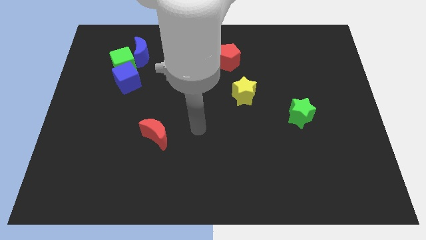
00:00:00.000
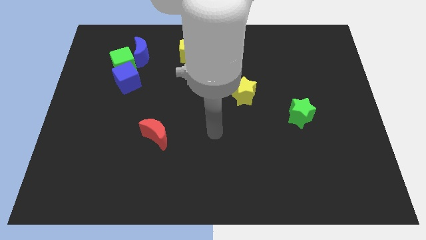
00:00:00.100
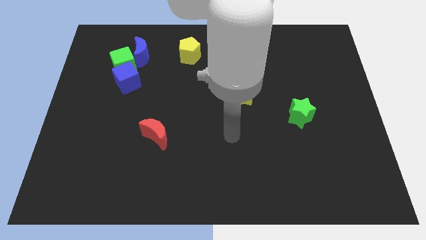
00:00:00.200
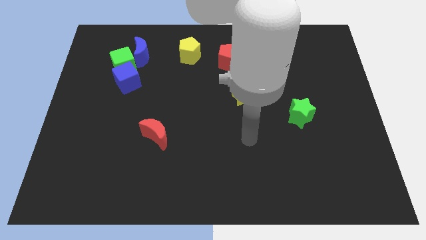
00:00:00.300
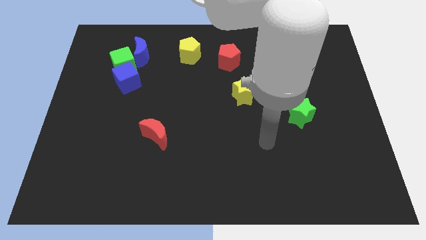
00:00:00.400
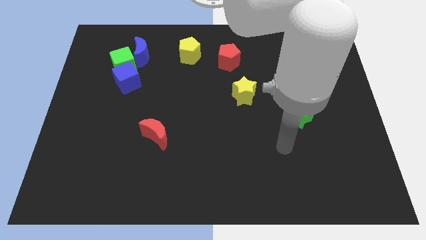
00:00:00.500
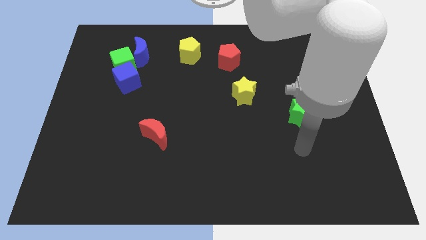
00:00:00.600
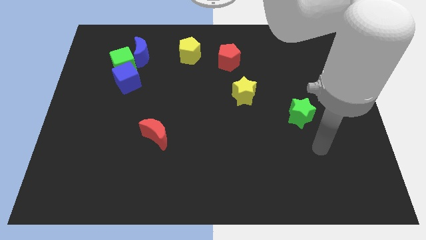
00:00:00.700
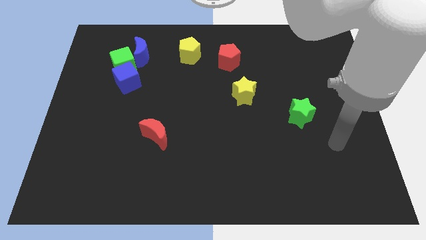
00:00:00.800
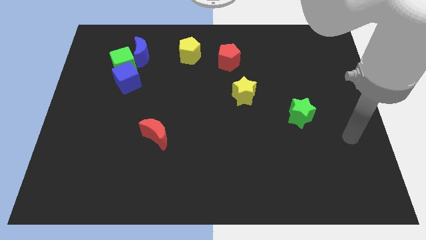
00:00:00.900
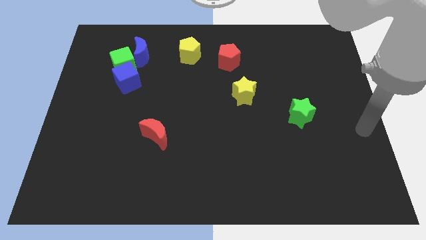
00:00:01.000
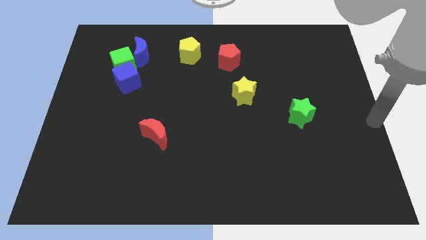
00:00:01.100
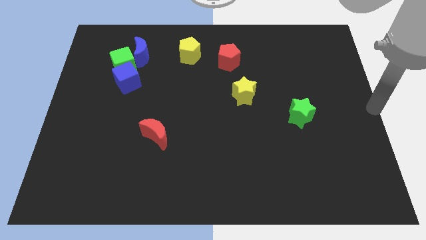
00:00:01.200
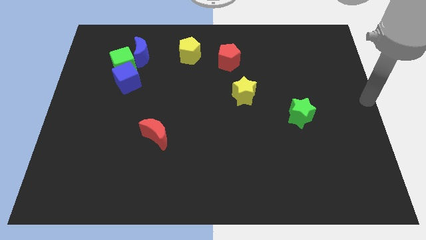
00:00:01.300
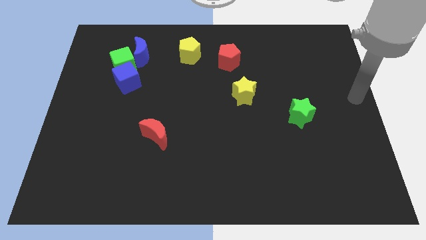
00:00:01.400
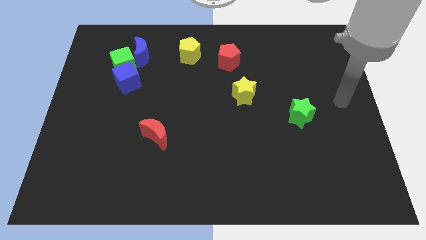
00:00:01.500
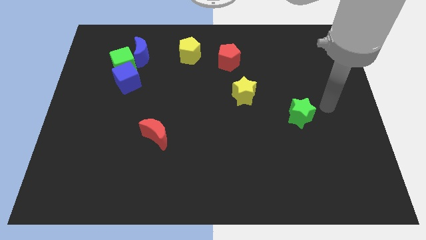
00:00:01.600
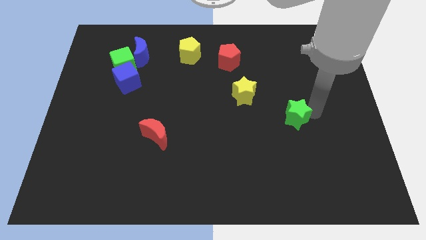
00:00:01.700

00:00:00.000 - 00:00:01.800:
move your arm to the right side of the green star

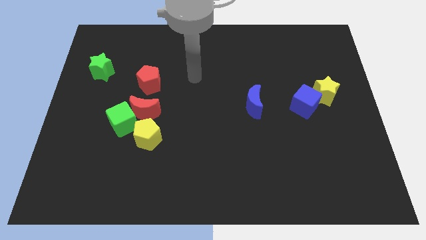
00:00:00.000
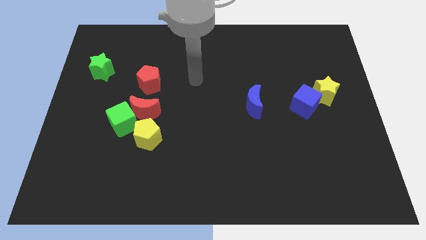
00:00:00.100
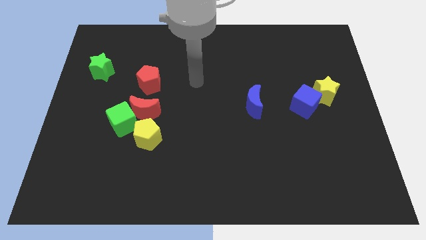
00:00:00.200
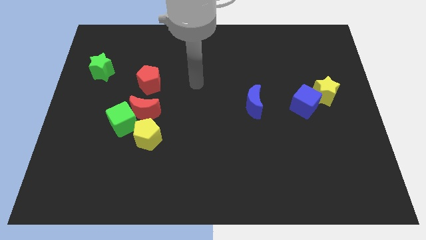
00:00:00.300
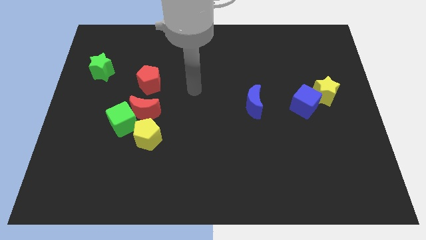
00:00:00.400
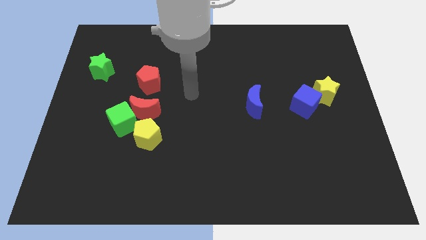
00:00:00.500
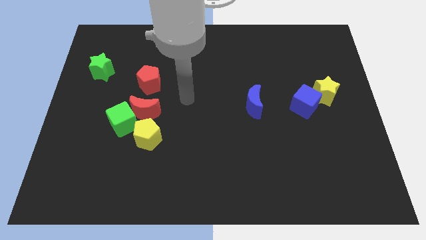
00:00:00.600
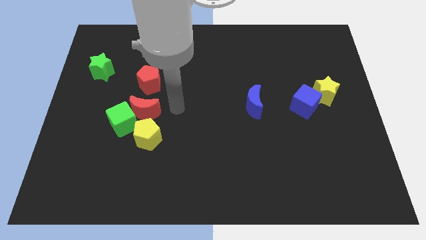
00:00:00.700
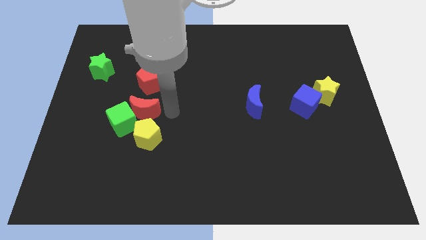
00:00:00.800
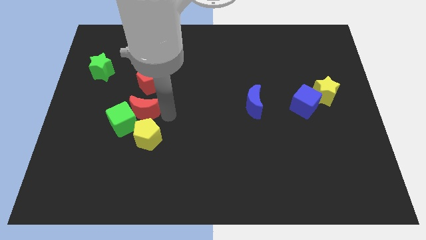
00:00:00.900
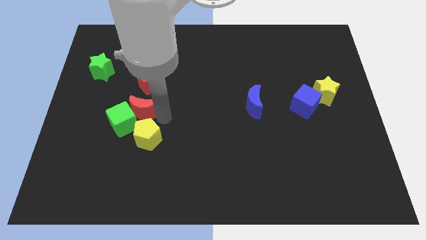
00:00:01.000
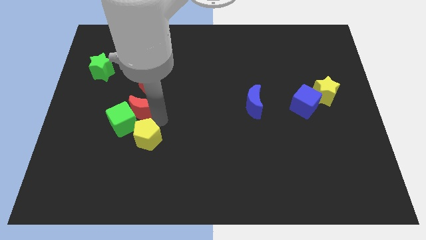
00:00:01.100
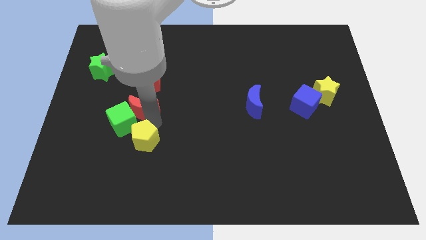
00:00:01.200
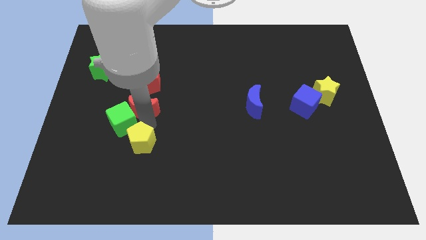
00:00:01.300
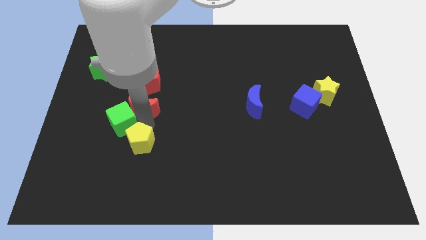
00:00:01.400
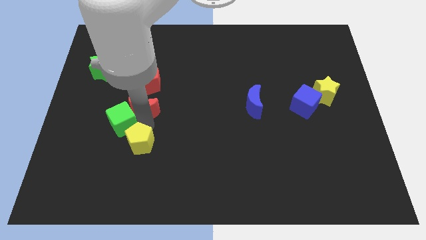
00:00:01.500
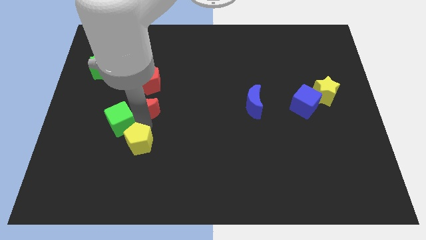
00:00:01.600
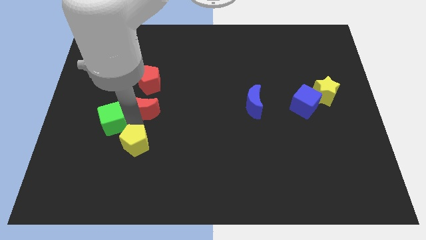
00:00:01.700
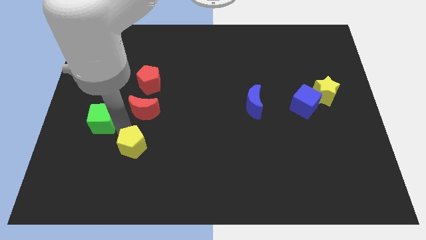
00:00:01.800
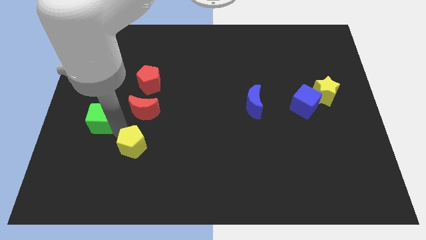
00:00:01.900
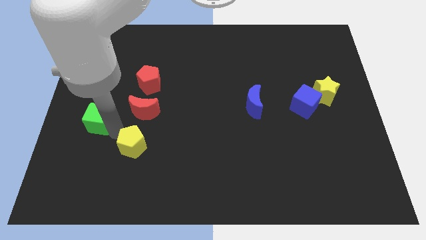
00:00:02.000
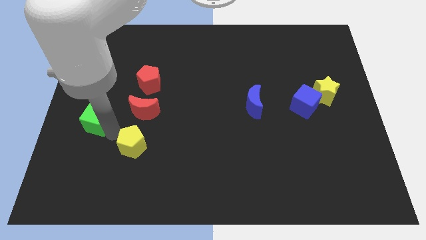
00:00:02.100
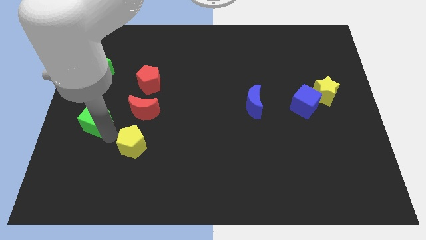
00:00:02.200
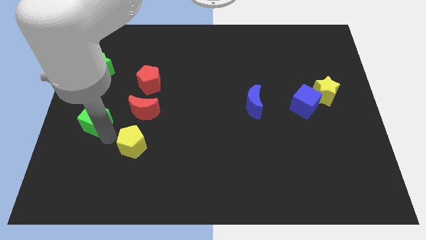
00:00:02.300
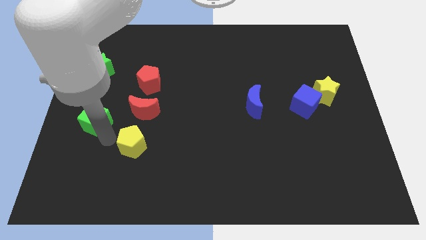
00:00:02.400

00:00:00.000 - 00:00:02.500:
separate the green cube and yellow pentagon

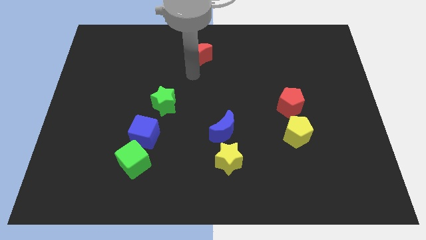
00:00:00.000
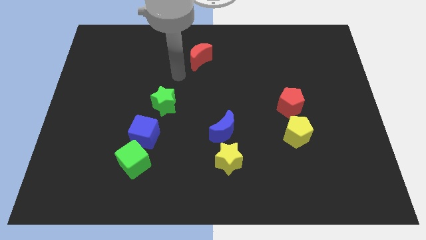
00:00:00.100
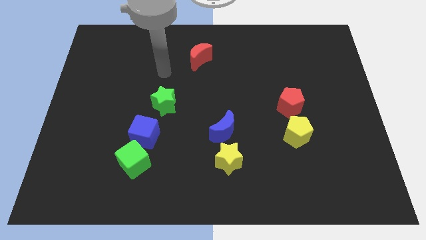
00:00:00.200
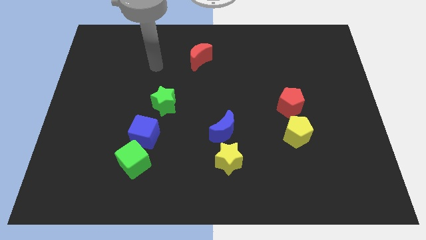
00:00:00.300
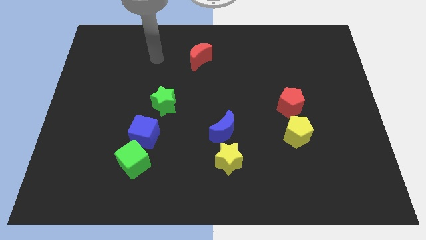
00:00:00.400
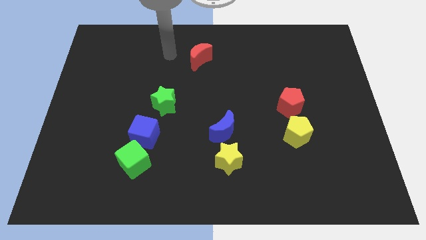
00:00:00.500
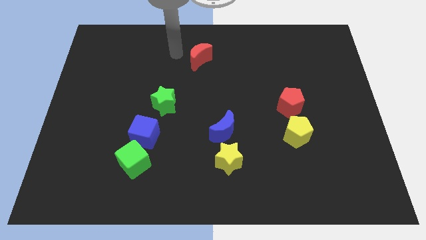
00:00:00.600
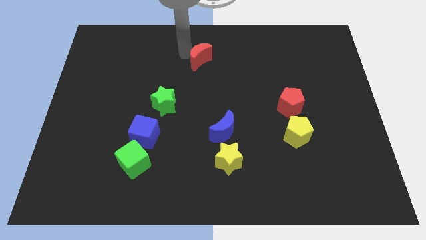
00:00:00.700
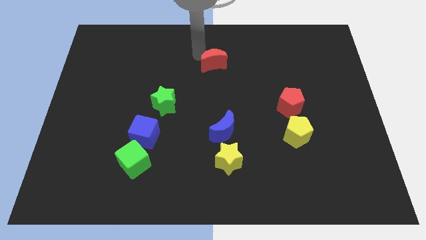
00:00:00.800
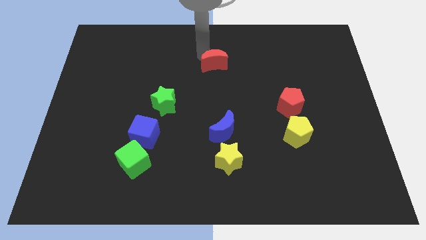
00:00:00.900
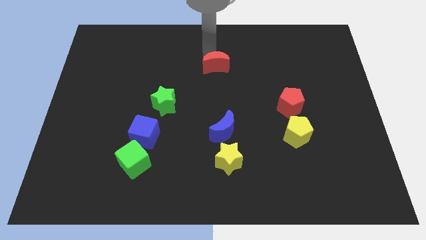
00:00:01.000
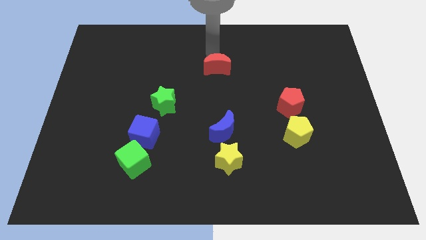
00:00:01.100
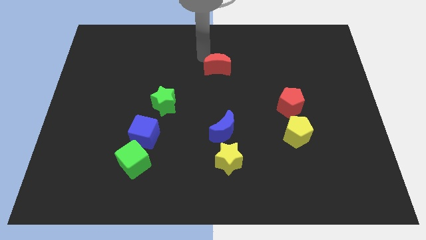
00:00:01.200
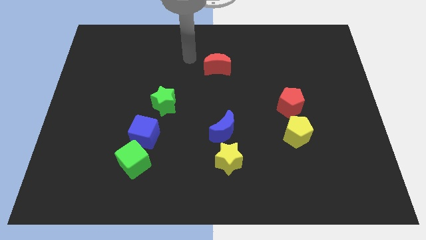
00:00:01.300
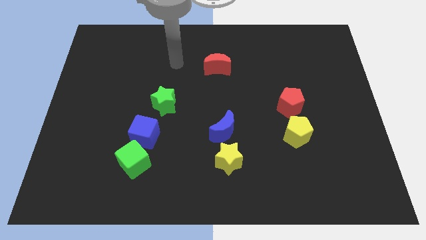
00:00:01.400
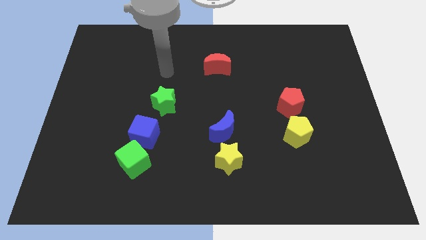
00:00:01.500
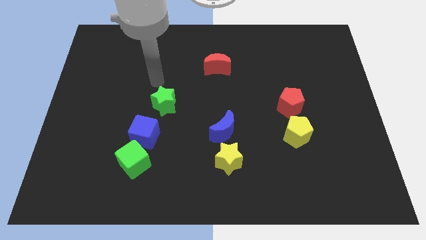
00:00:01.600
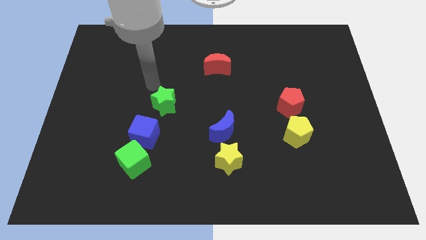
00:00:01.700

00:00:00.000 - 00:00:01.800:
place red moon to the top of blue moon

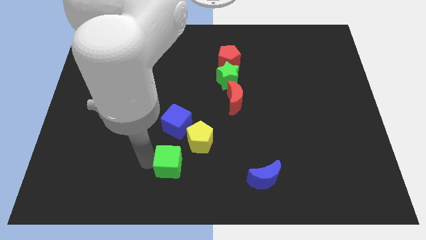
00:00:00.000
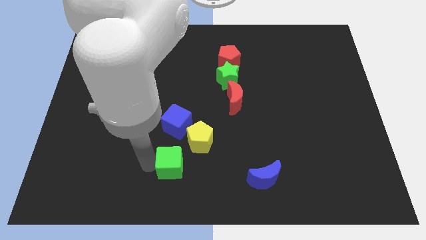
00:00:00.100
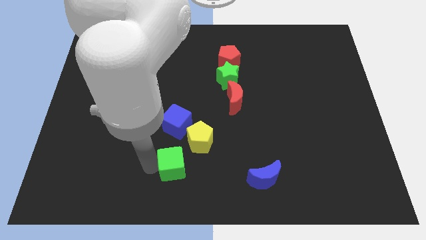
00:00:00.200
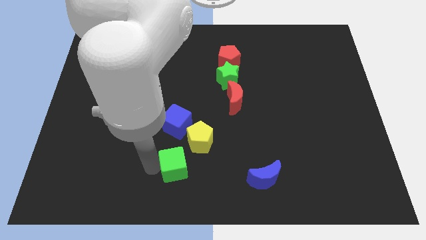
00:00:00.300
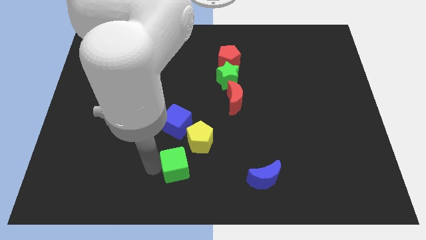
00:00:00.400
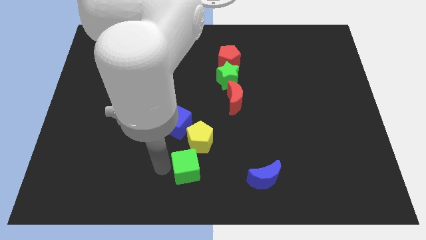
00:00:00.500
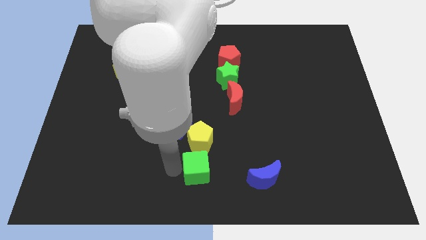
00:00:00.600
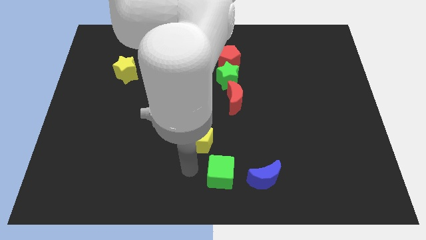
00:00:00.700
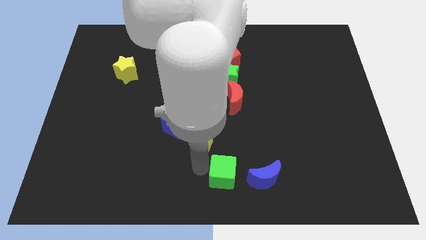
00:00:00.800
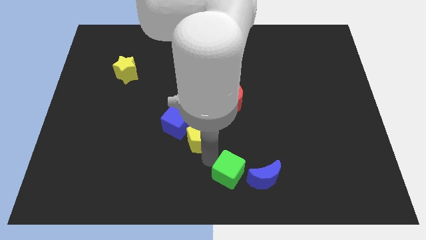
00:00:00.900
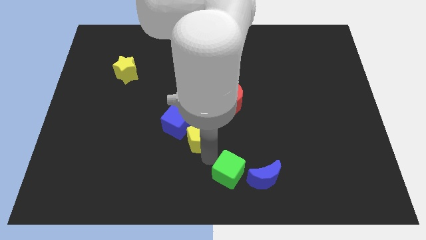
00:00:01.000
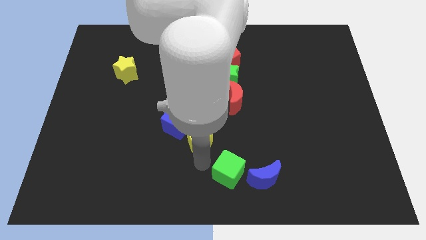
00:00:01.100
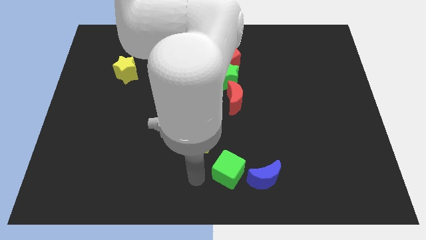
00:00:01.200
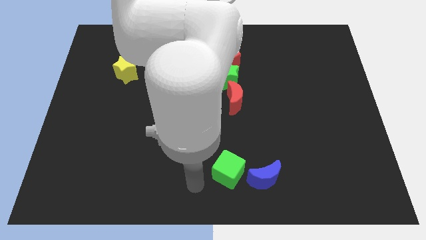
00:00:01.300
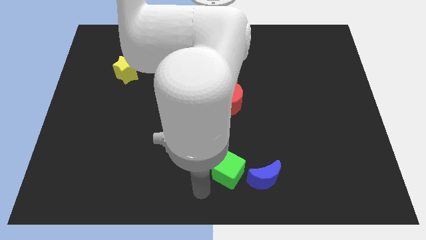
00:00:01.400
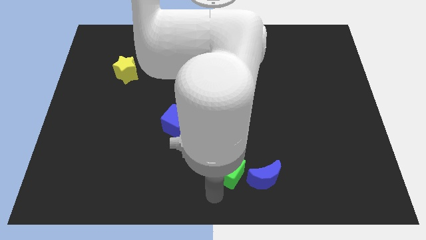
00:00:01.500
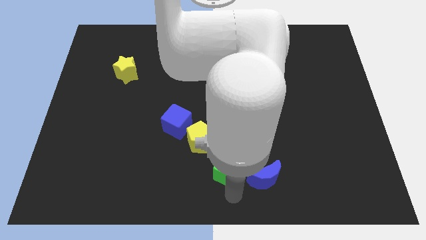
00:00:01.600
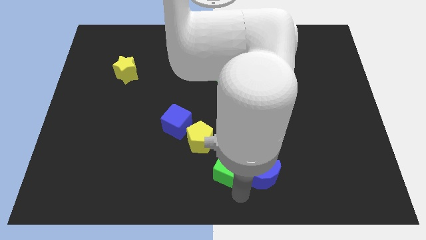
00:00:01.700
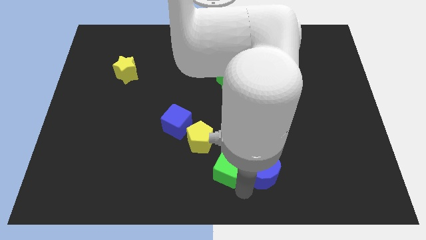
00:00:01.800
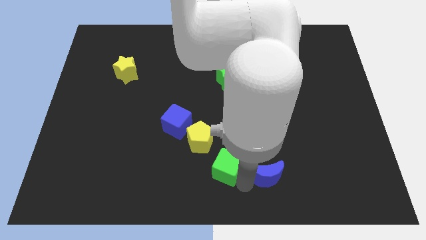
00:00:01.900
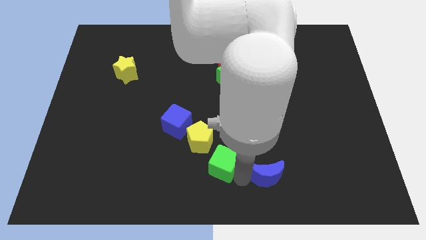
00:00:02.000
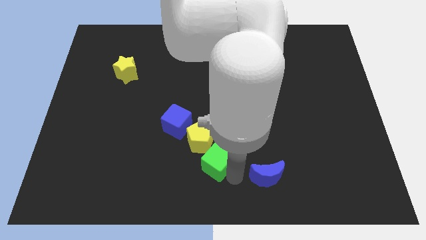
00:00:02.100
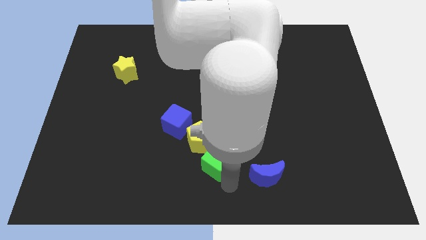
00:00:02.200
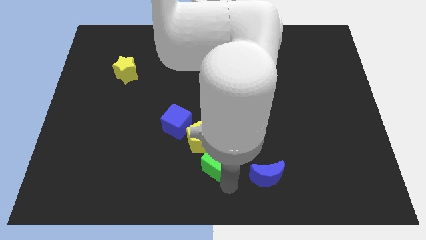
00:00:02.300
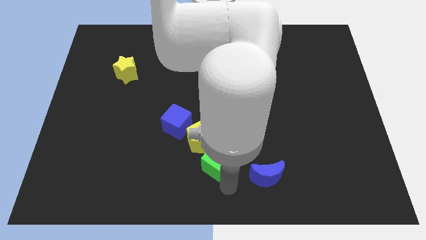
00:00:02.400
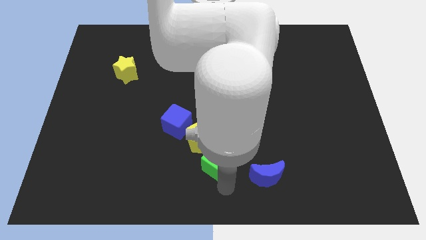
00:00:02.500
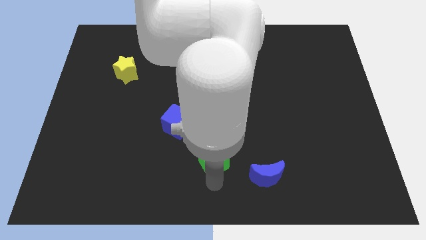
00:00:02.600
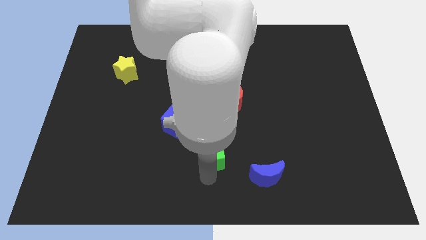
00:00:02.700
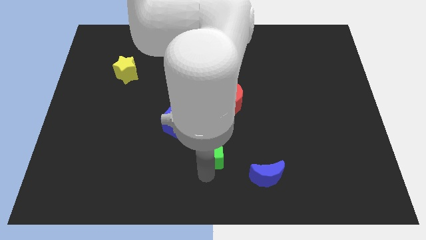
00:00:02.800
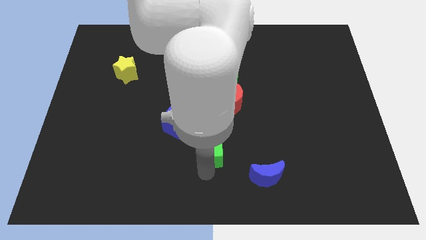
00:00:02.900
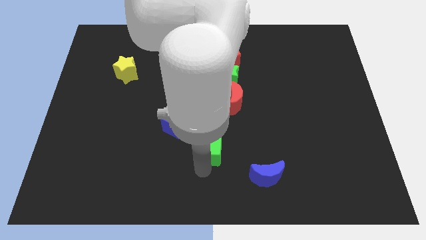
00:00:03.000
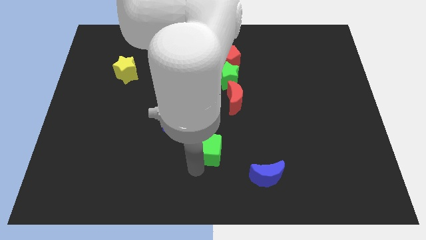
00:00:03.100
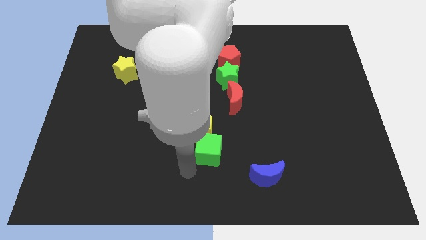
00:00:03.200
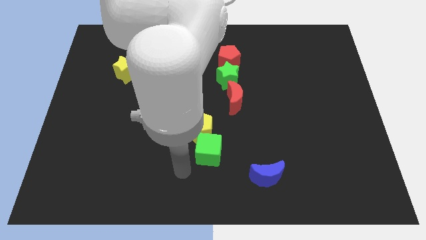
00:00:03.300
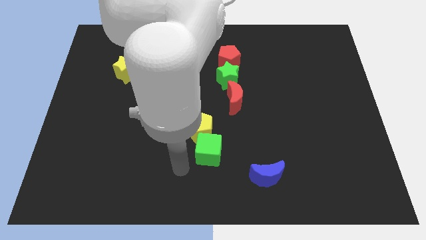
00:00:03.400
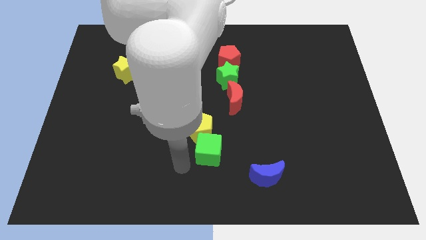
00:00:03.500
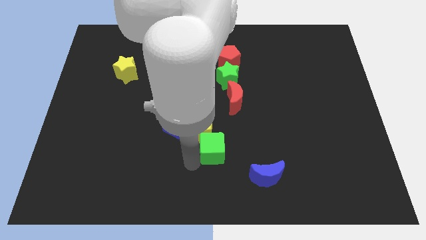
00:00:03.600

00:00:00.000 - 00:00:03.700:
push green cube below yellow pentagon
